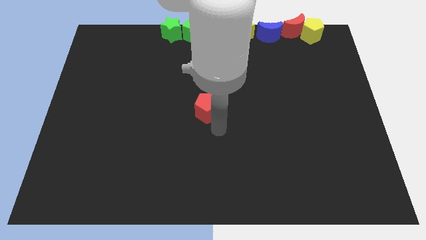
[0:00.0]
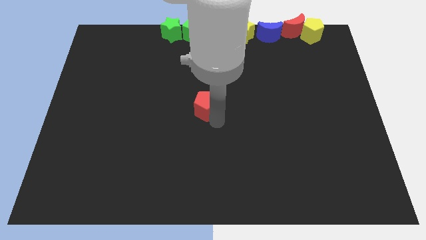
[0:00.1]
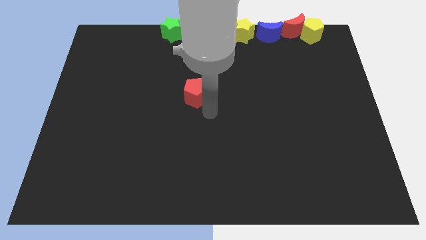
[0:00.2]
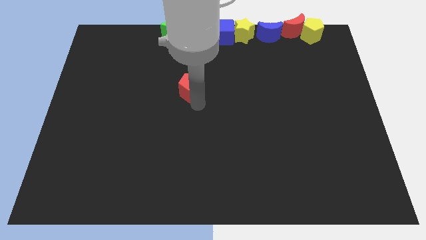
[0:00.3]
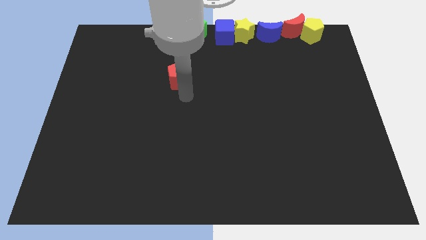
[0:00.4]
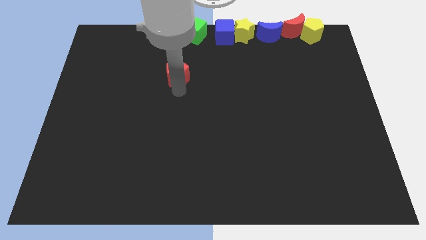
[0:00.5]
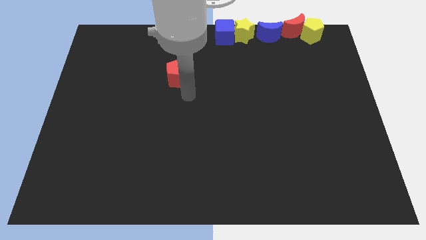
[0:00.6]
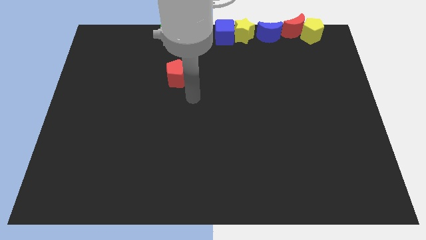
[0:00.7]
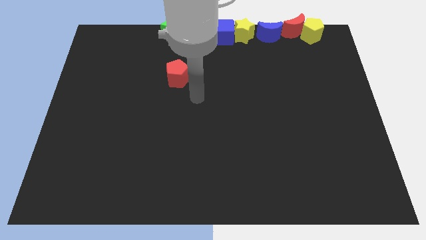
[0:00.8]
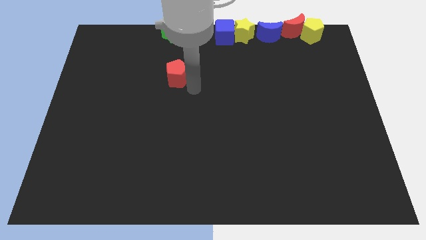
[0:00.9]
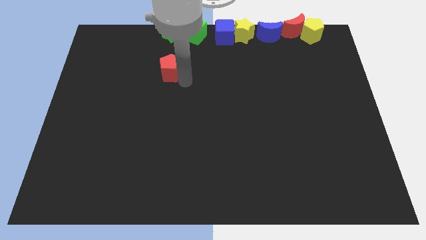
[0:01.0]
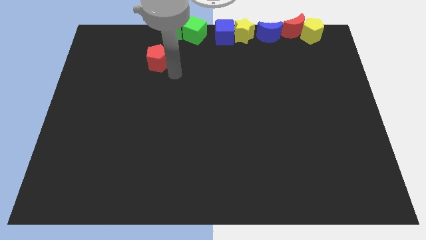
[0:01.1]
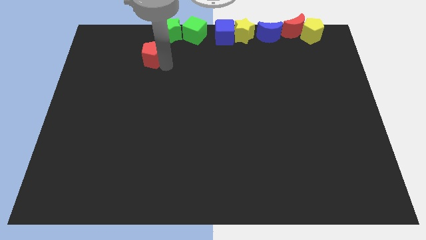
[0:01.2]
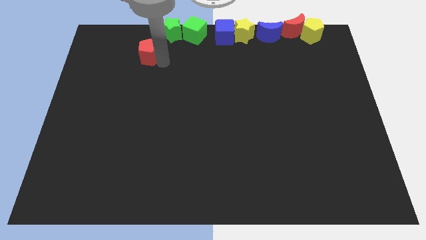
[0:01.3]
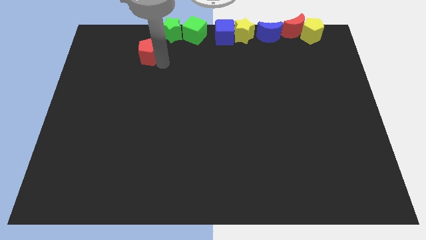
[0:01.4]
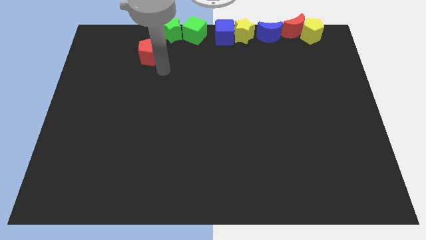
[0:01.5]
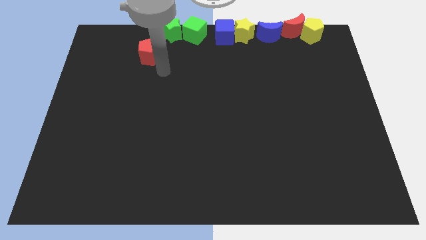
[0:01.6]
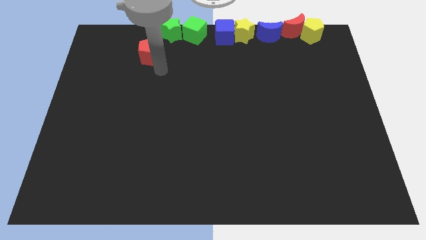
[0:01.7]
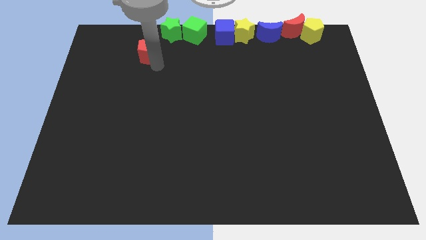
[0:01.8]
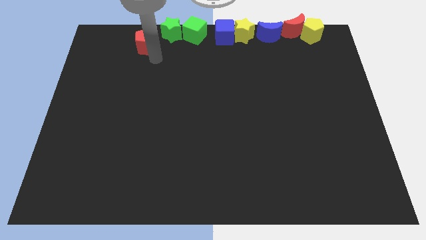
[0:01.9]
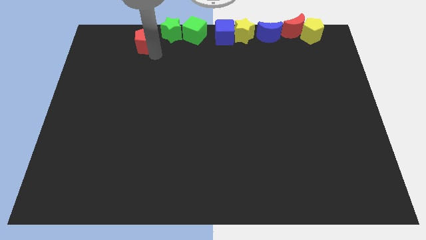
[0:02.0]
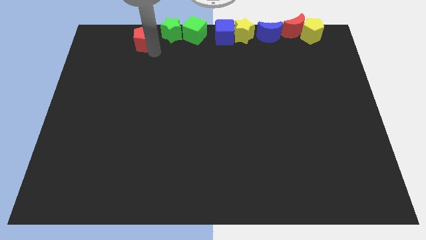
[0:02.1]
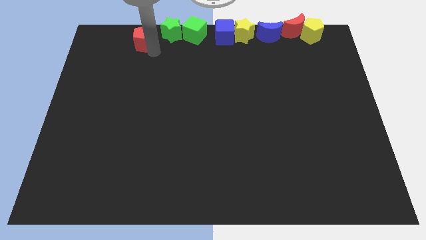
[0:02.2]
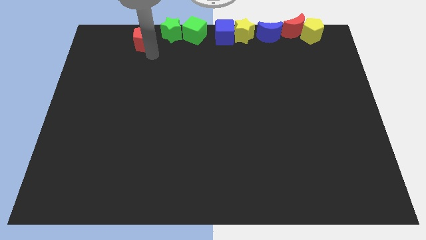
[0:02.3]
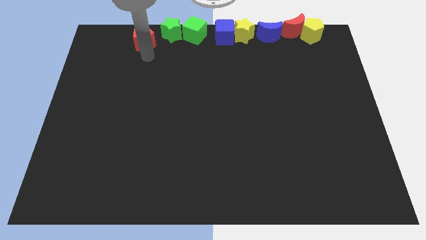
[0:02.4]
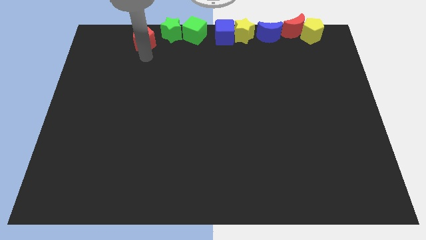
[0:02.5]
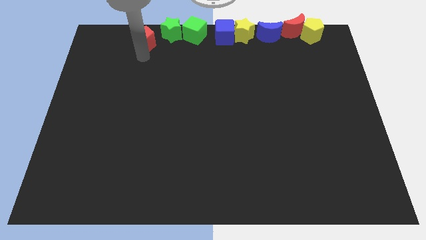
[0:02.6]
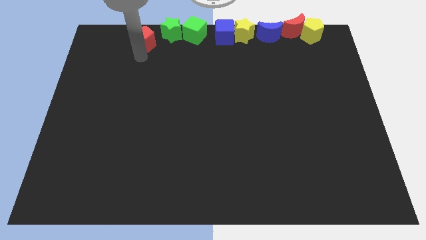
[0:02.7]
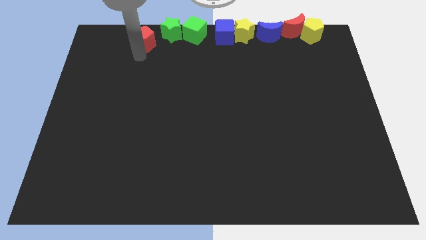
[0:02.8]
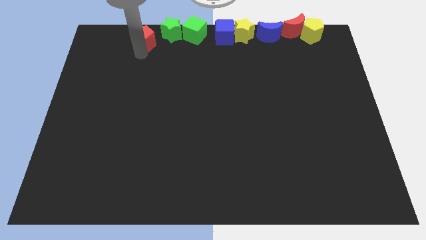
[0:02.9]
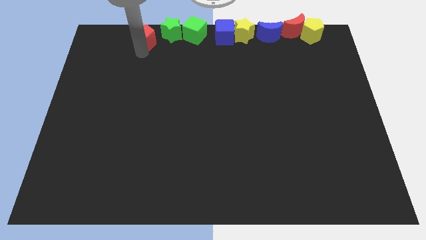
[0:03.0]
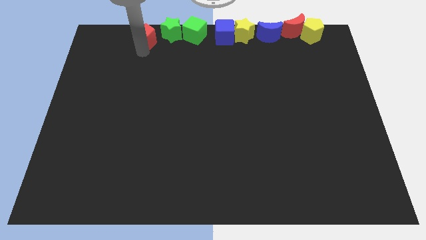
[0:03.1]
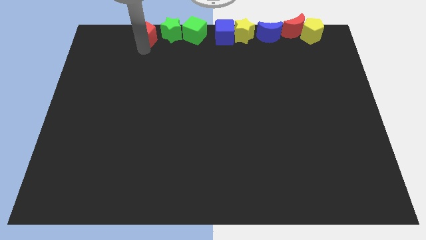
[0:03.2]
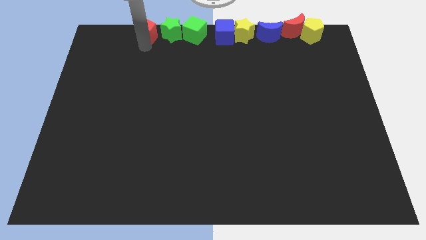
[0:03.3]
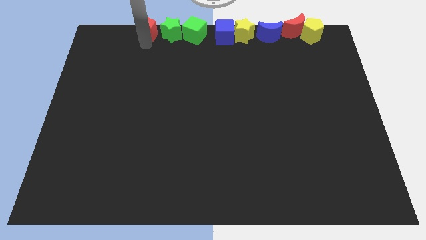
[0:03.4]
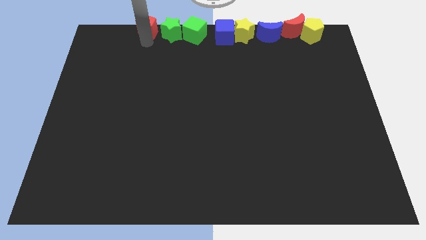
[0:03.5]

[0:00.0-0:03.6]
move the red pentagon to the left of the green star

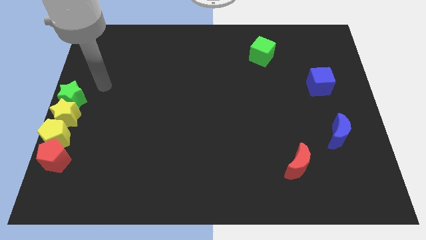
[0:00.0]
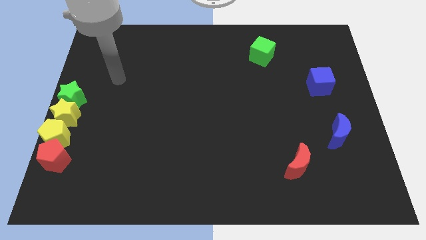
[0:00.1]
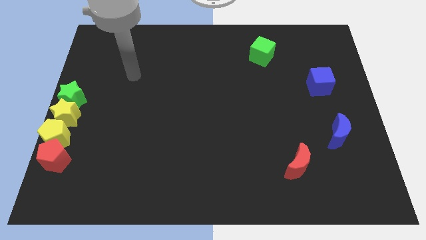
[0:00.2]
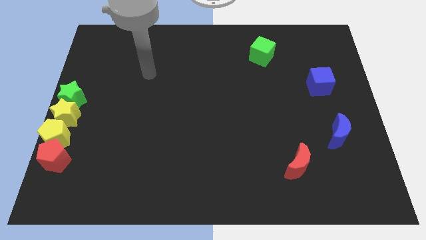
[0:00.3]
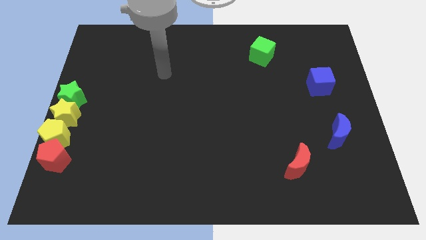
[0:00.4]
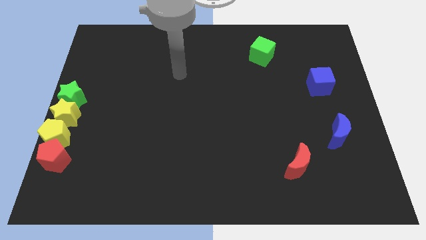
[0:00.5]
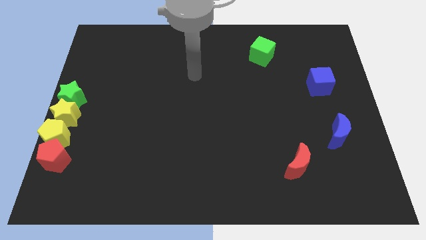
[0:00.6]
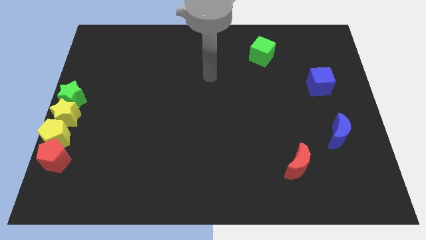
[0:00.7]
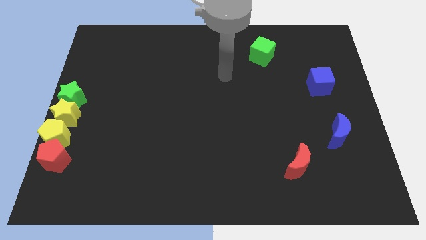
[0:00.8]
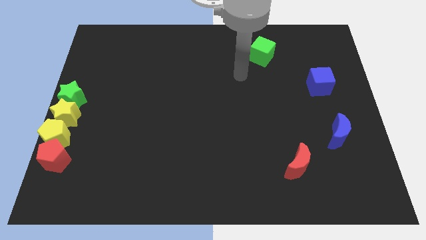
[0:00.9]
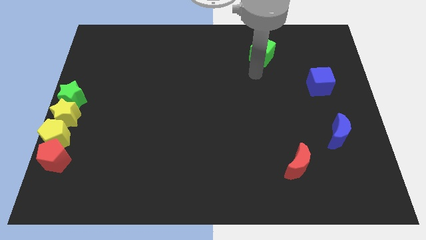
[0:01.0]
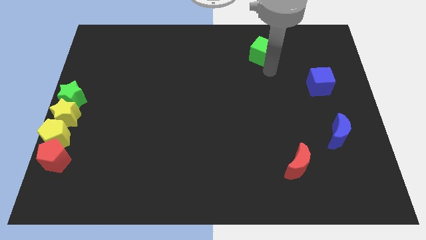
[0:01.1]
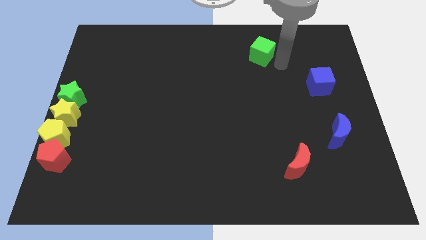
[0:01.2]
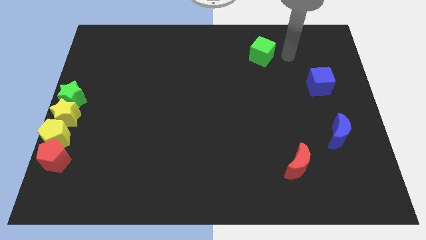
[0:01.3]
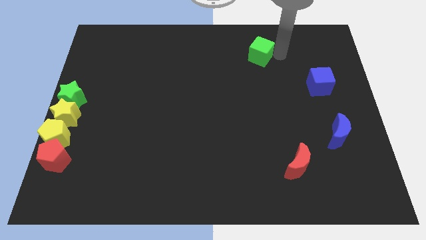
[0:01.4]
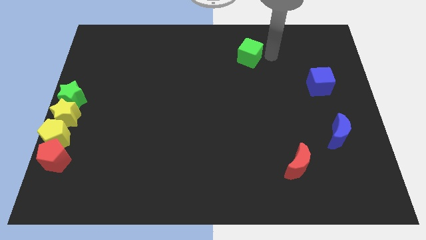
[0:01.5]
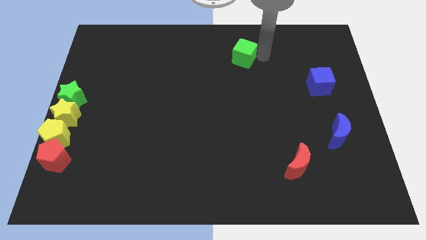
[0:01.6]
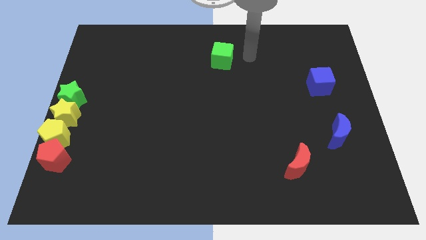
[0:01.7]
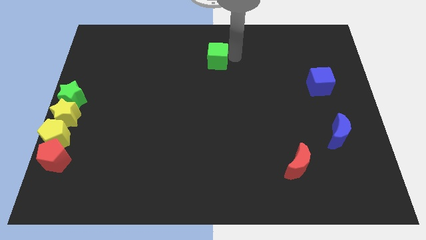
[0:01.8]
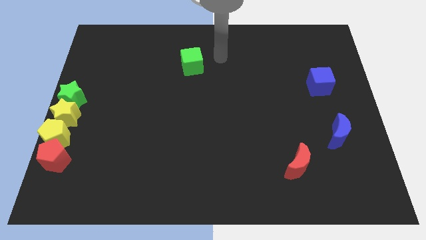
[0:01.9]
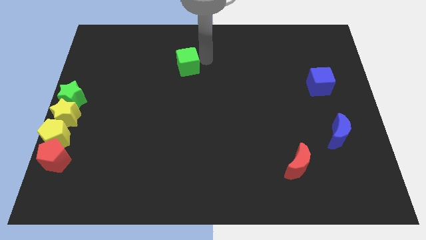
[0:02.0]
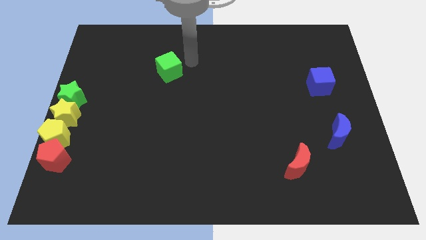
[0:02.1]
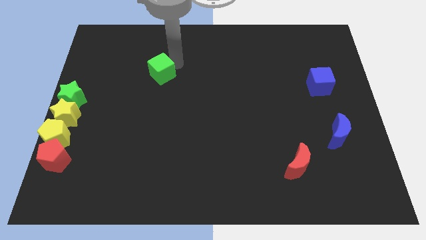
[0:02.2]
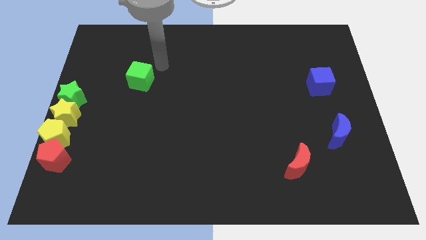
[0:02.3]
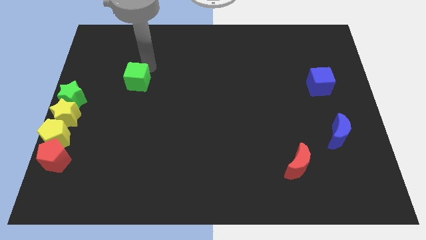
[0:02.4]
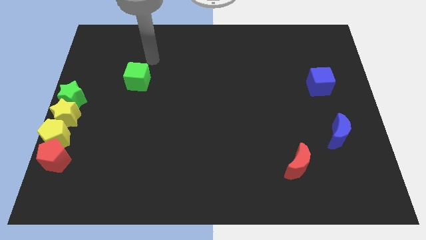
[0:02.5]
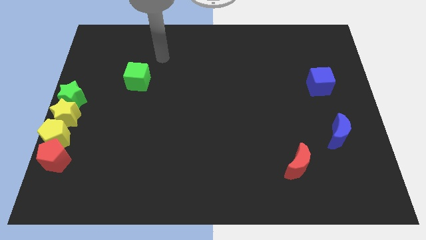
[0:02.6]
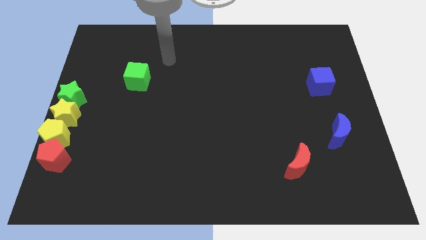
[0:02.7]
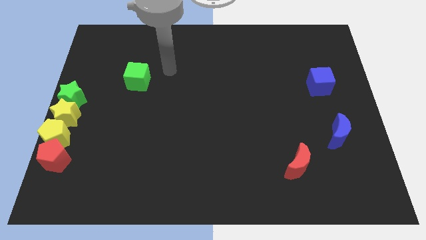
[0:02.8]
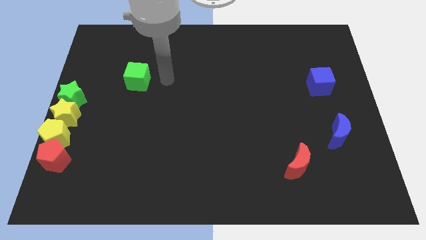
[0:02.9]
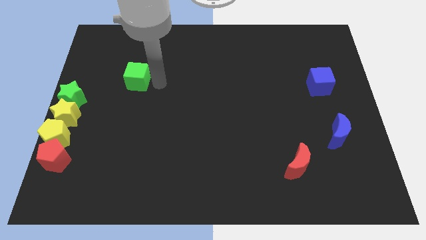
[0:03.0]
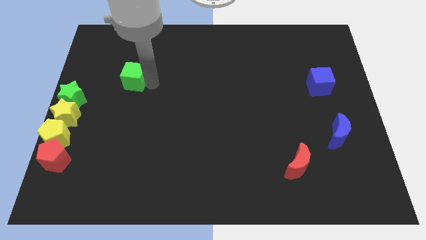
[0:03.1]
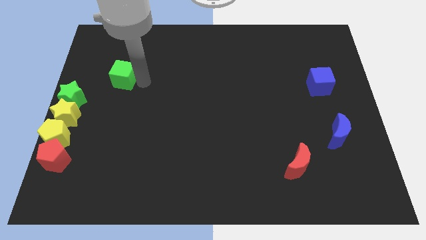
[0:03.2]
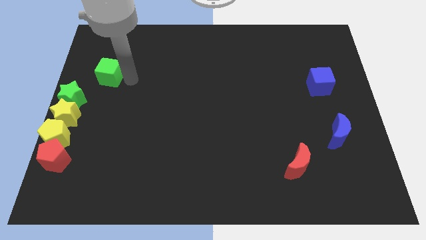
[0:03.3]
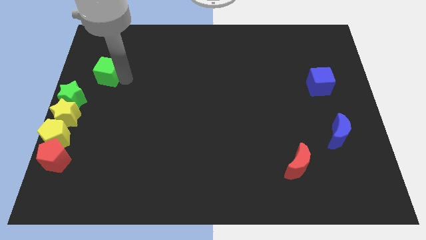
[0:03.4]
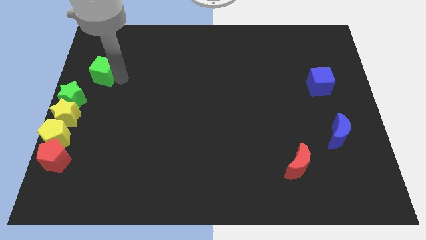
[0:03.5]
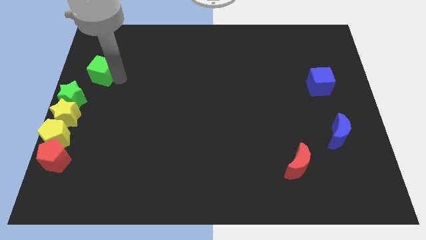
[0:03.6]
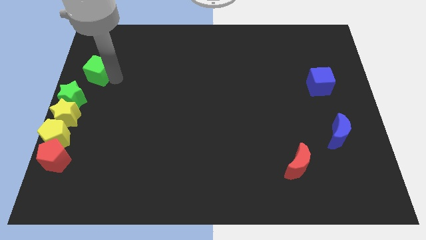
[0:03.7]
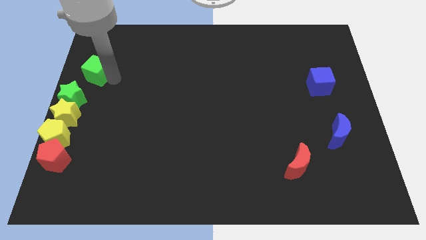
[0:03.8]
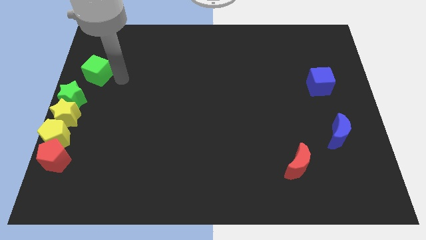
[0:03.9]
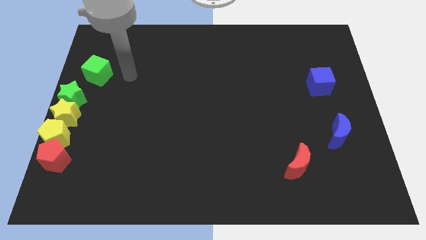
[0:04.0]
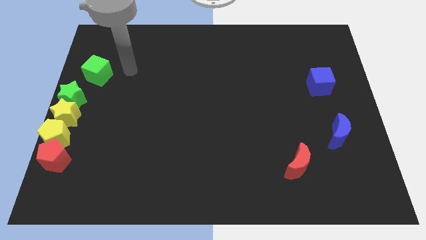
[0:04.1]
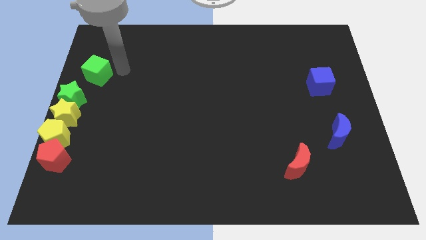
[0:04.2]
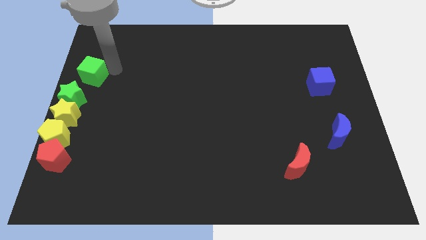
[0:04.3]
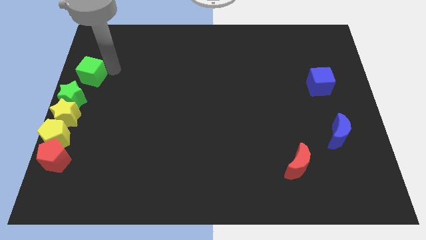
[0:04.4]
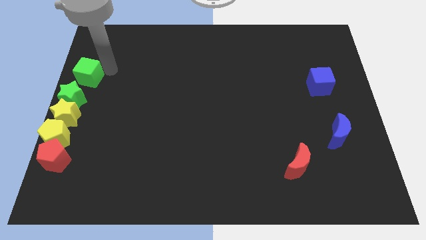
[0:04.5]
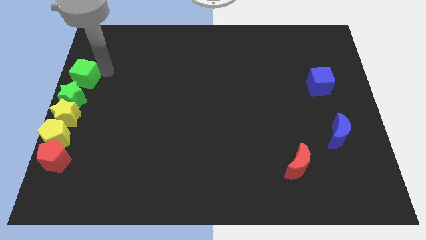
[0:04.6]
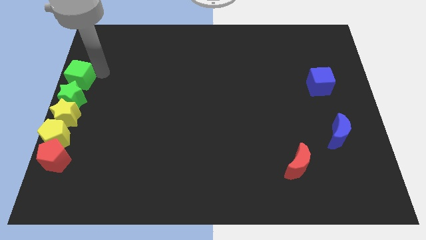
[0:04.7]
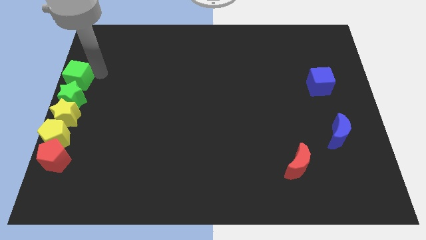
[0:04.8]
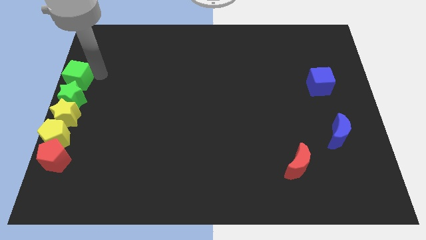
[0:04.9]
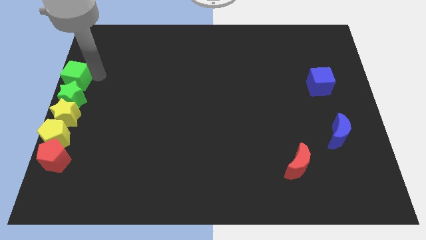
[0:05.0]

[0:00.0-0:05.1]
move green cube to the top of green star

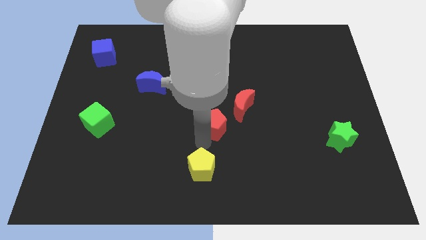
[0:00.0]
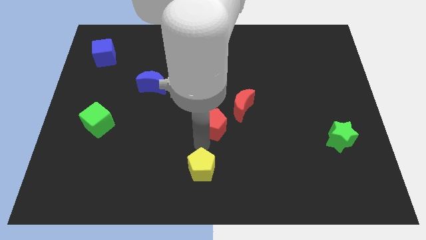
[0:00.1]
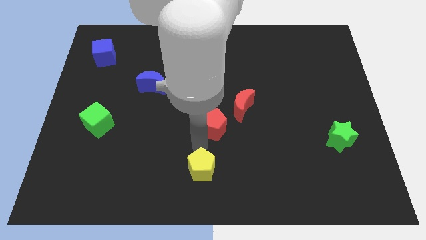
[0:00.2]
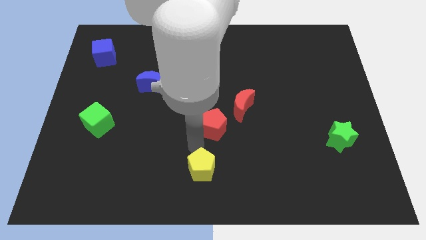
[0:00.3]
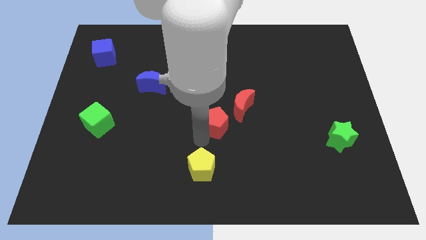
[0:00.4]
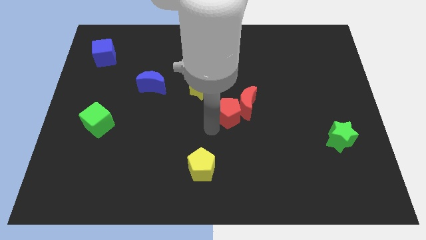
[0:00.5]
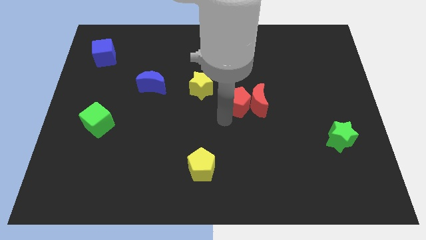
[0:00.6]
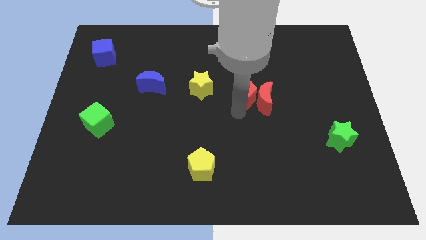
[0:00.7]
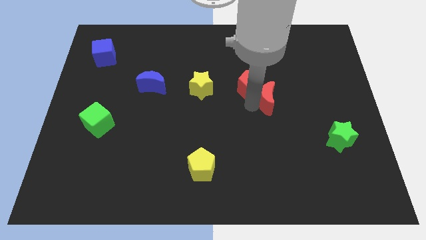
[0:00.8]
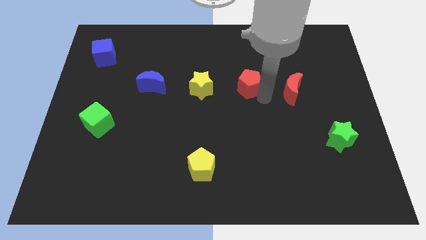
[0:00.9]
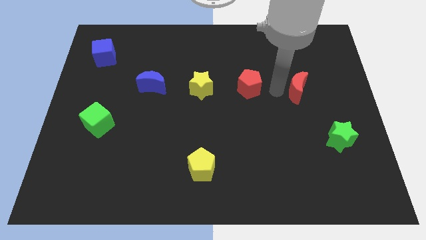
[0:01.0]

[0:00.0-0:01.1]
push red pentagon to the center right
